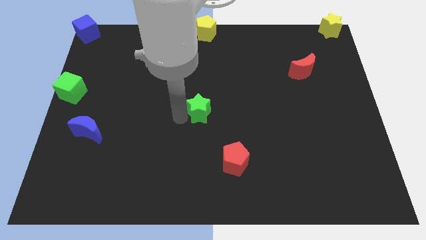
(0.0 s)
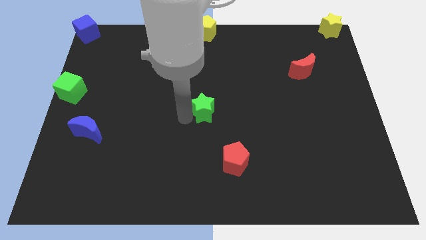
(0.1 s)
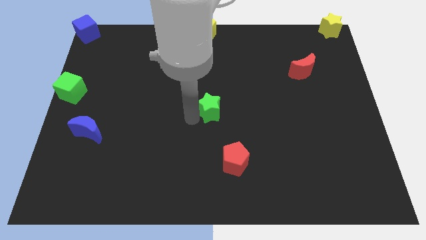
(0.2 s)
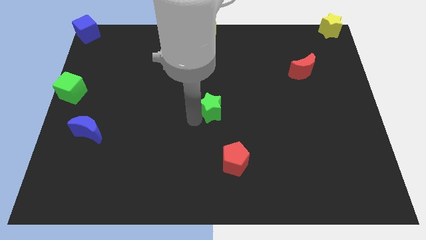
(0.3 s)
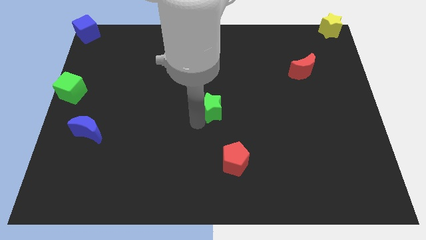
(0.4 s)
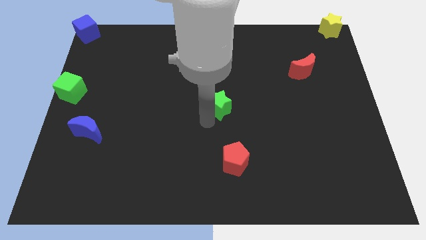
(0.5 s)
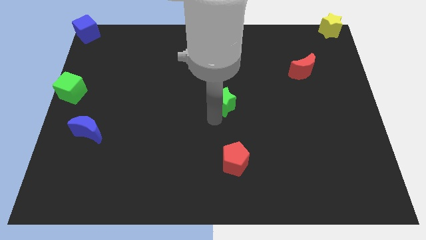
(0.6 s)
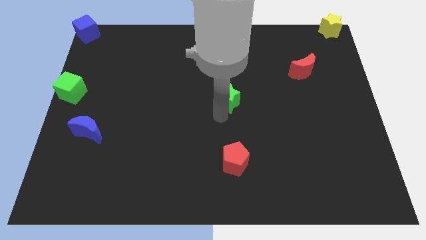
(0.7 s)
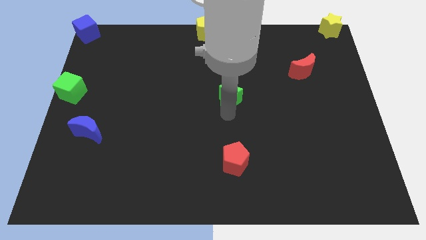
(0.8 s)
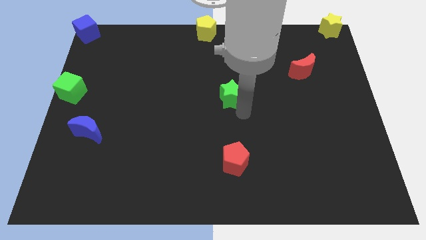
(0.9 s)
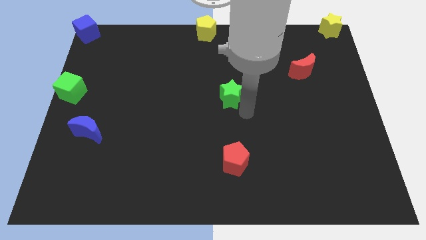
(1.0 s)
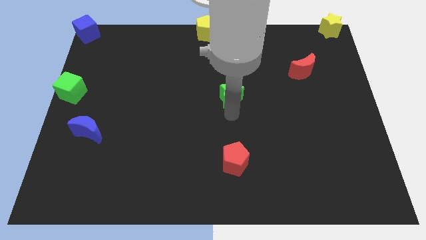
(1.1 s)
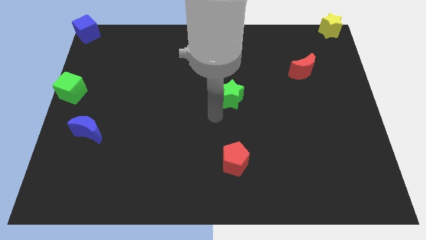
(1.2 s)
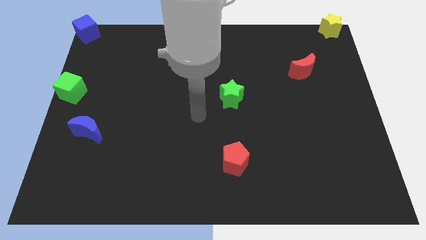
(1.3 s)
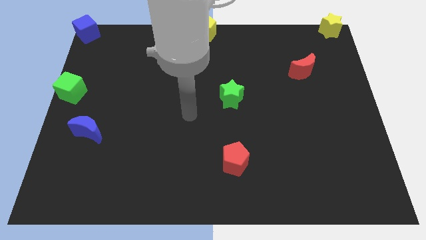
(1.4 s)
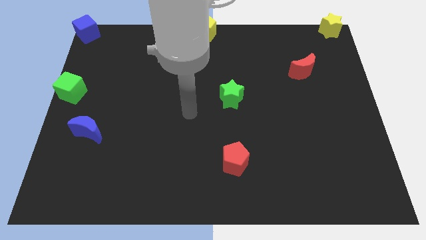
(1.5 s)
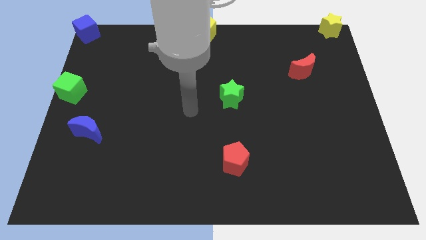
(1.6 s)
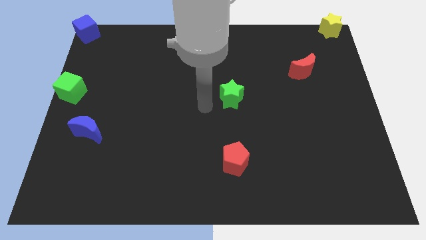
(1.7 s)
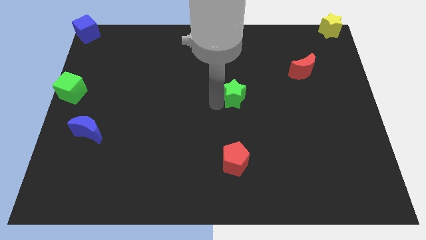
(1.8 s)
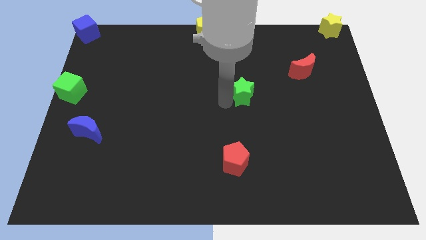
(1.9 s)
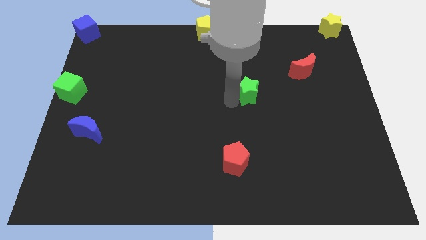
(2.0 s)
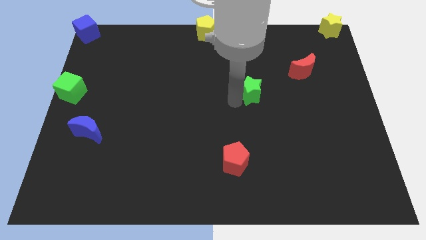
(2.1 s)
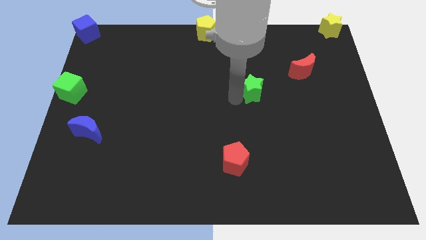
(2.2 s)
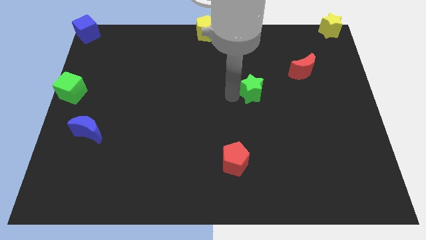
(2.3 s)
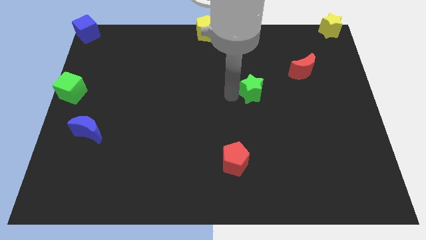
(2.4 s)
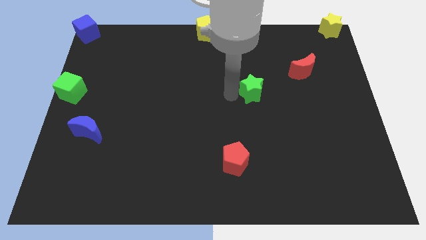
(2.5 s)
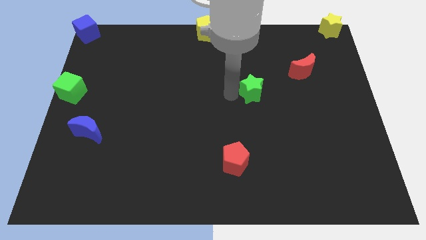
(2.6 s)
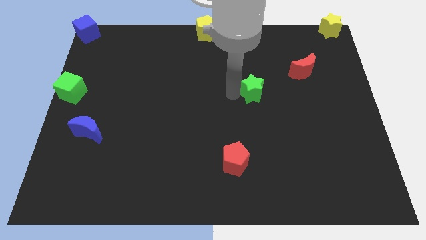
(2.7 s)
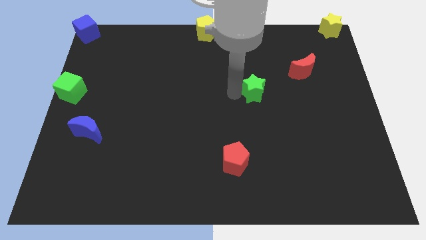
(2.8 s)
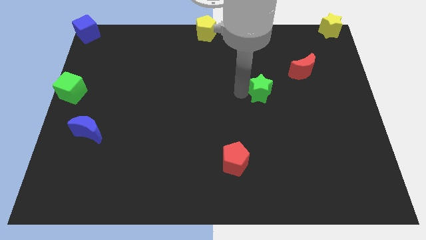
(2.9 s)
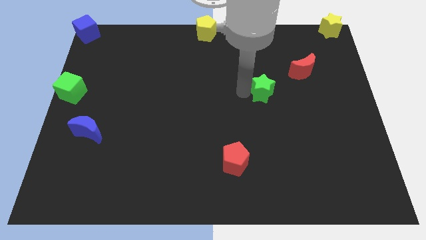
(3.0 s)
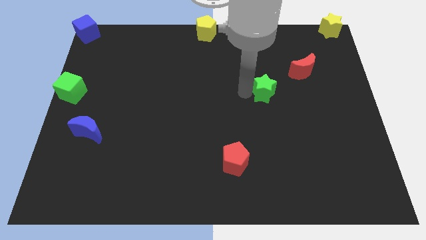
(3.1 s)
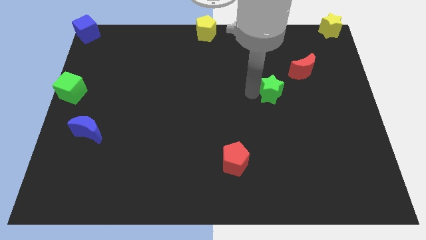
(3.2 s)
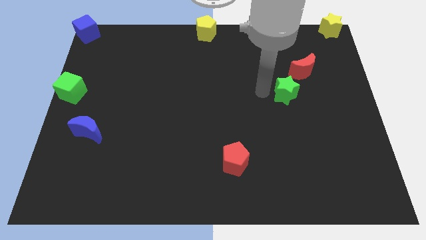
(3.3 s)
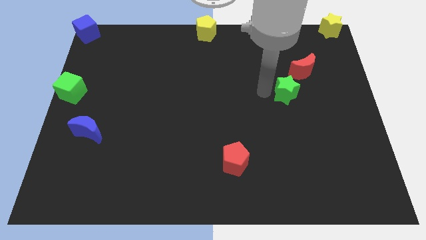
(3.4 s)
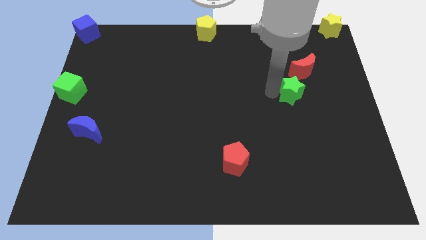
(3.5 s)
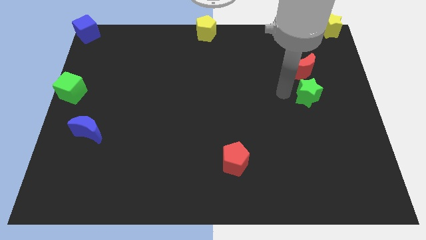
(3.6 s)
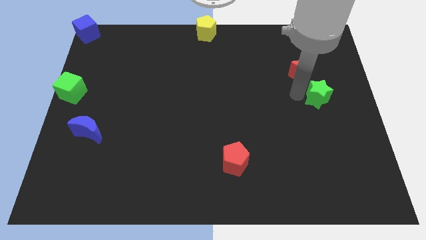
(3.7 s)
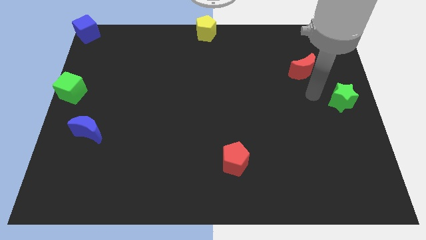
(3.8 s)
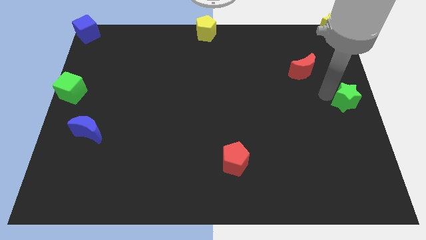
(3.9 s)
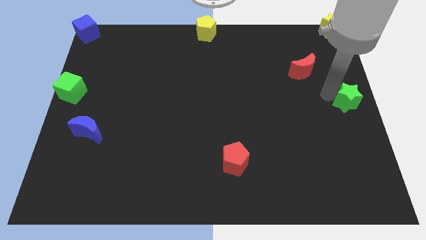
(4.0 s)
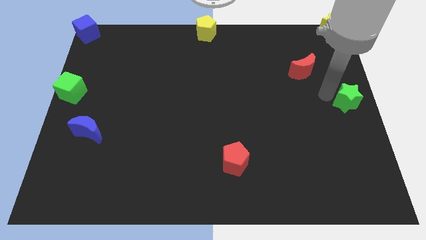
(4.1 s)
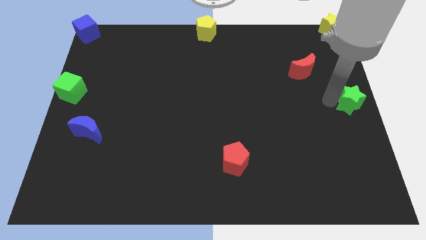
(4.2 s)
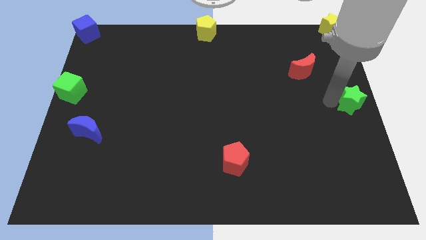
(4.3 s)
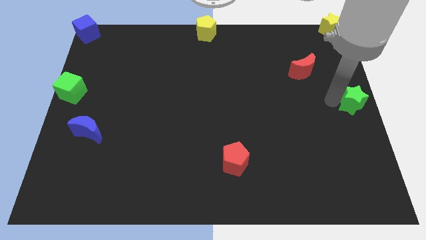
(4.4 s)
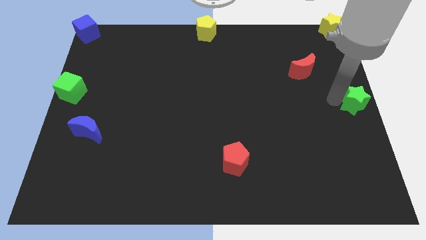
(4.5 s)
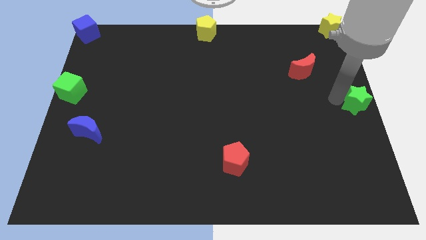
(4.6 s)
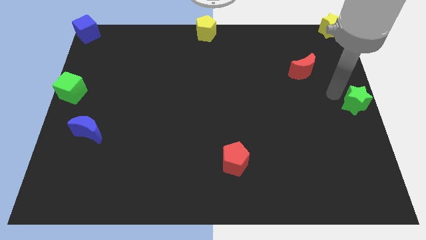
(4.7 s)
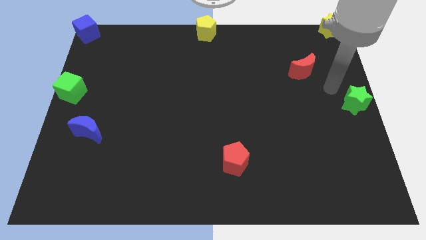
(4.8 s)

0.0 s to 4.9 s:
place the green star vertical below yellow star

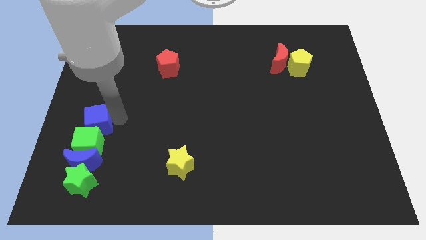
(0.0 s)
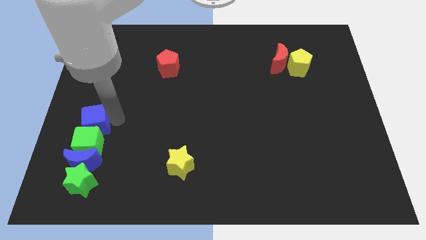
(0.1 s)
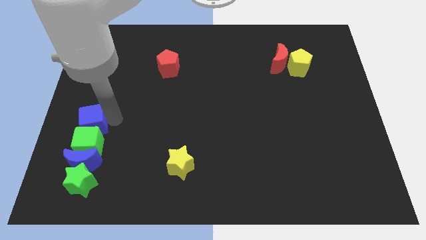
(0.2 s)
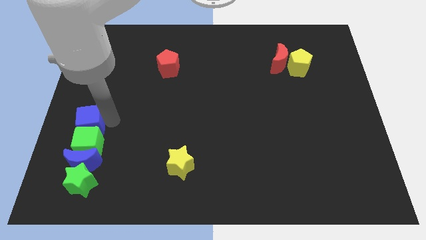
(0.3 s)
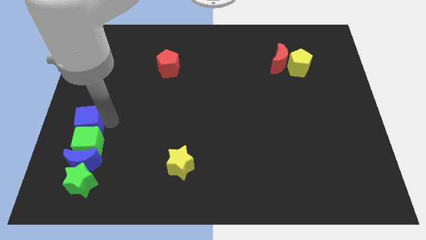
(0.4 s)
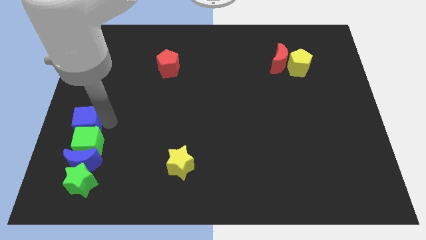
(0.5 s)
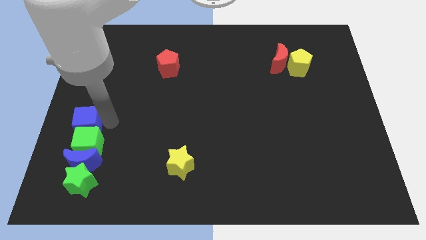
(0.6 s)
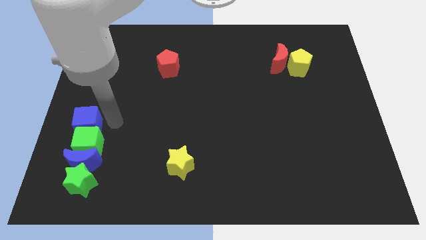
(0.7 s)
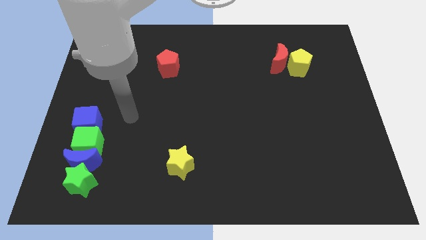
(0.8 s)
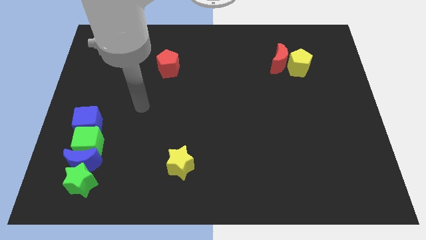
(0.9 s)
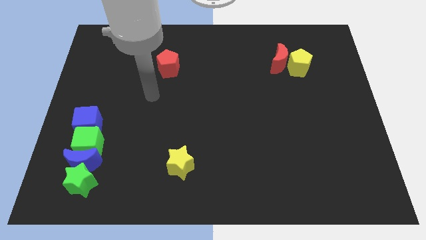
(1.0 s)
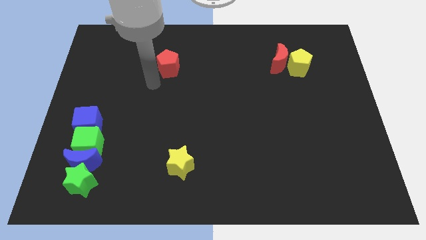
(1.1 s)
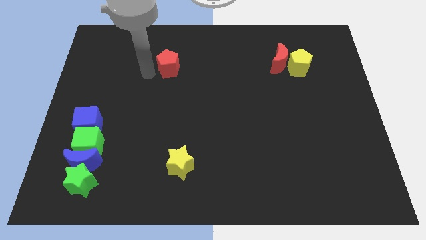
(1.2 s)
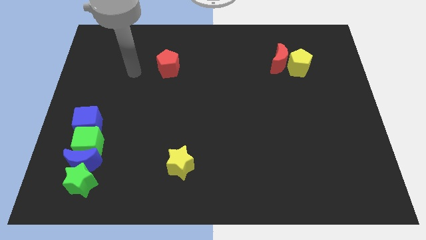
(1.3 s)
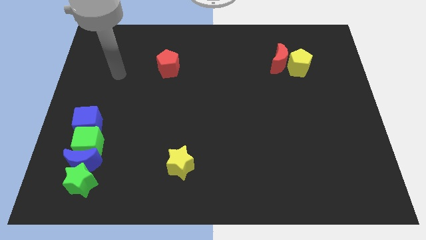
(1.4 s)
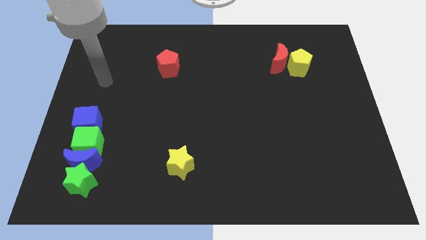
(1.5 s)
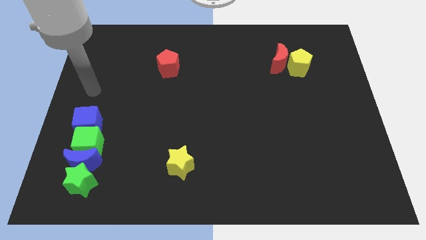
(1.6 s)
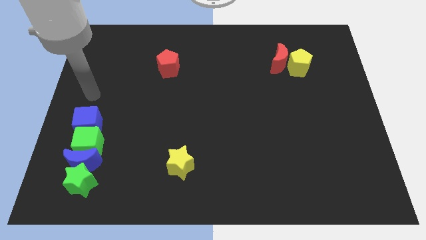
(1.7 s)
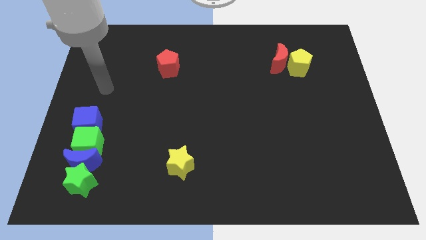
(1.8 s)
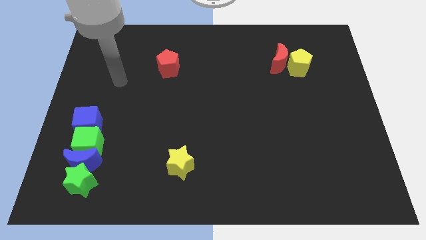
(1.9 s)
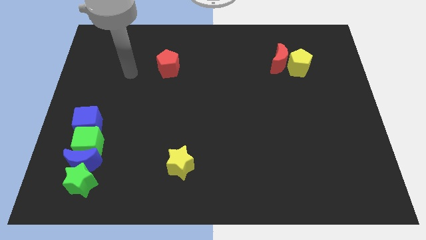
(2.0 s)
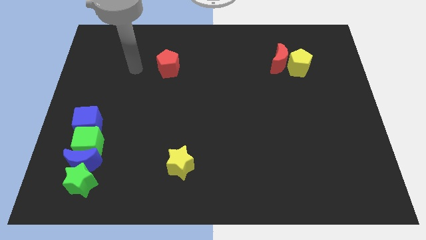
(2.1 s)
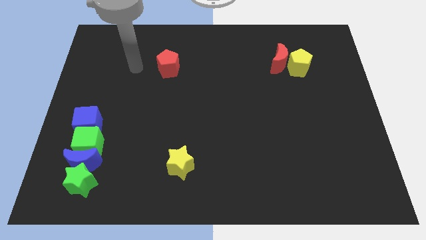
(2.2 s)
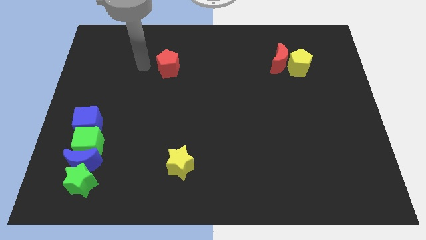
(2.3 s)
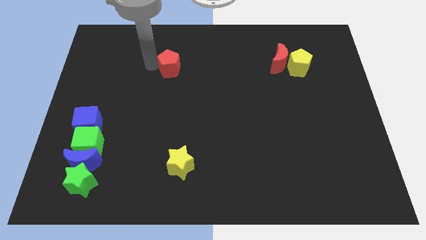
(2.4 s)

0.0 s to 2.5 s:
place the arm left to the red pentagon

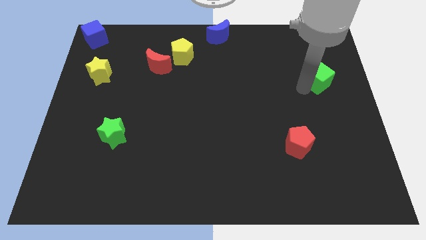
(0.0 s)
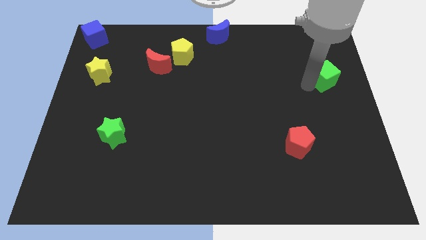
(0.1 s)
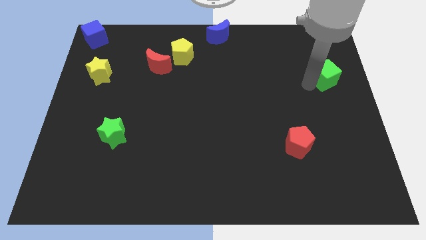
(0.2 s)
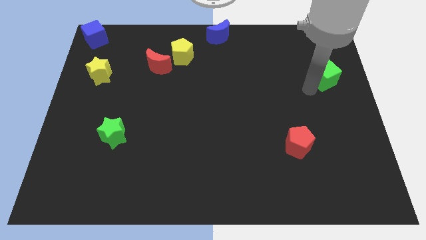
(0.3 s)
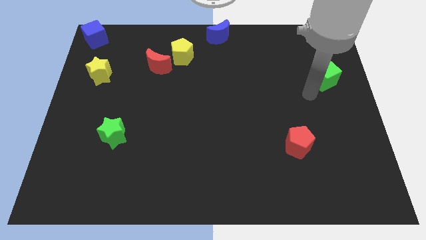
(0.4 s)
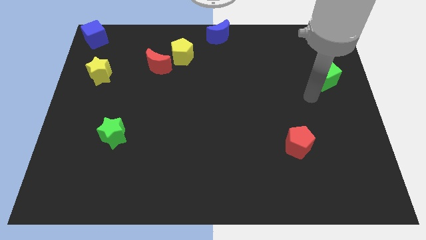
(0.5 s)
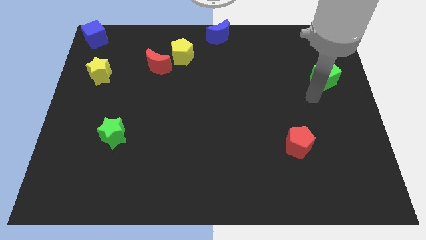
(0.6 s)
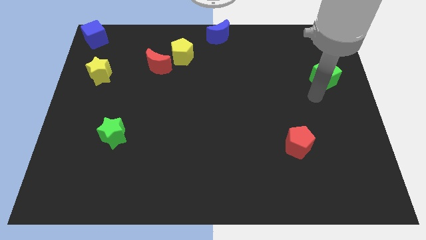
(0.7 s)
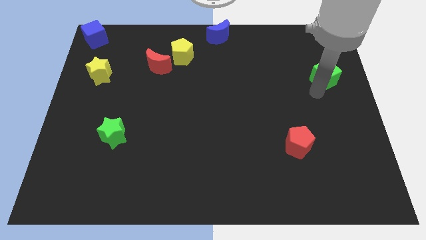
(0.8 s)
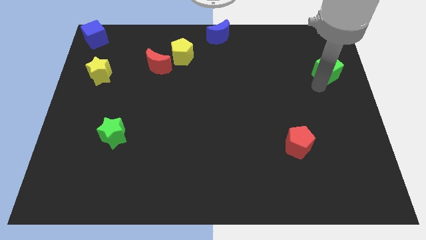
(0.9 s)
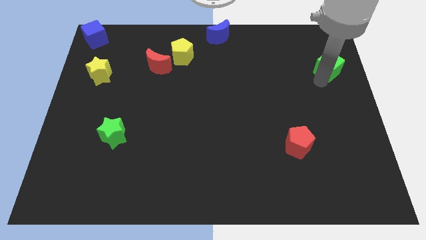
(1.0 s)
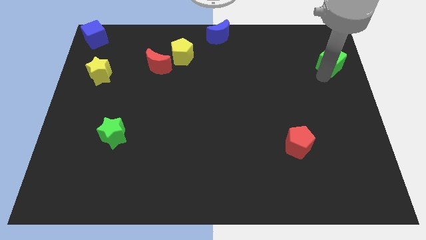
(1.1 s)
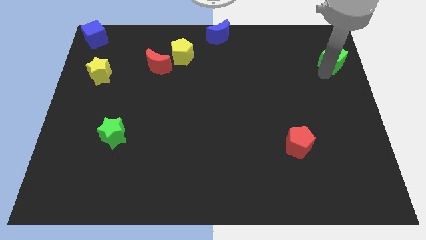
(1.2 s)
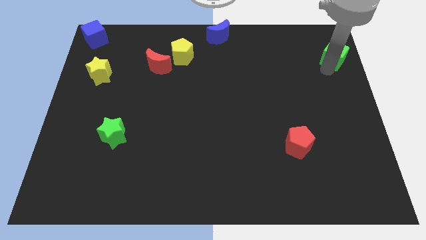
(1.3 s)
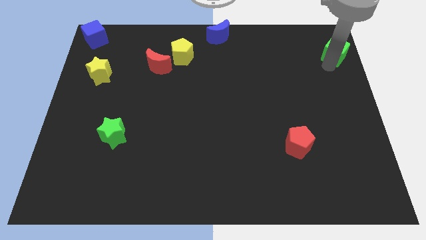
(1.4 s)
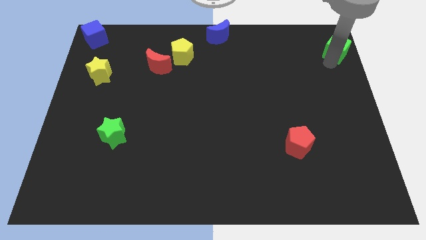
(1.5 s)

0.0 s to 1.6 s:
push the green cube to the top right corner of the board

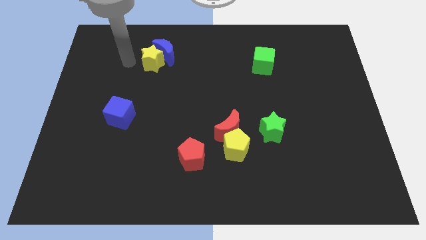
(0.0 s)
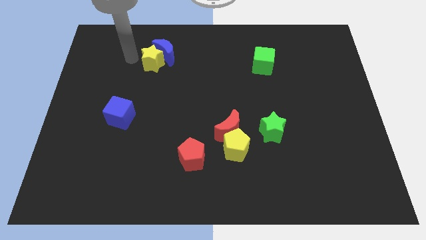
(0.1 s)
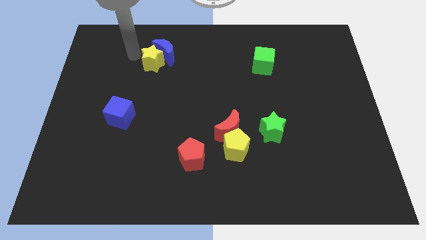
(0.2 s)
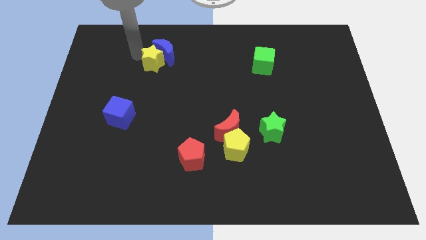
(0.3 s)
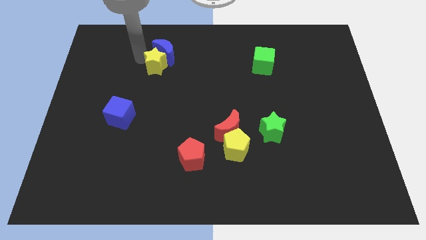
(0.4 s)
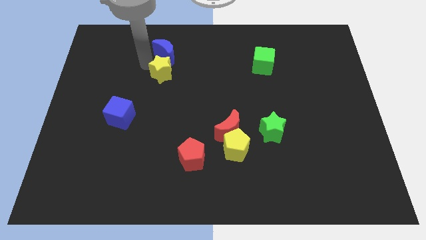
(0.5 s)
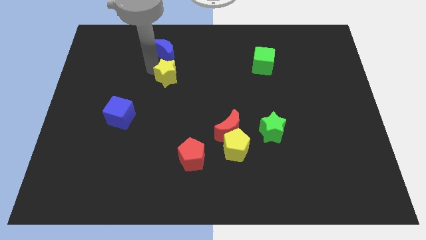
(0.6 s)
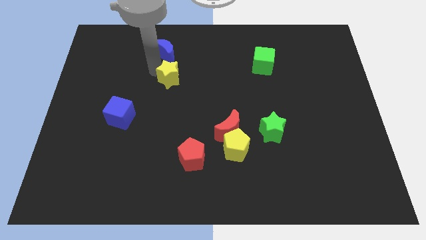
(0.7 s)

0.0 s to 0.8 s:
separate the yellow star from the blue crescent
